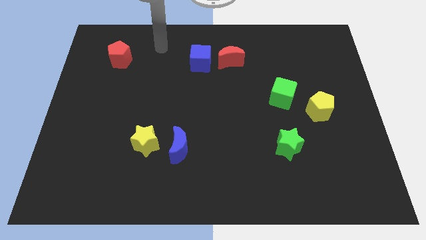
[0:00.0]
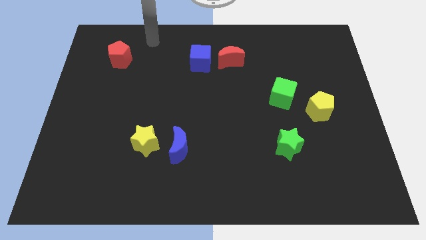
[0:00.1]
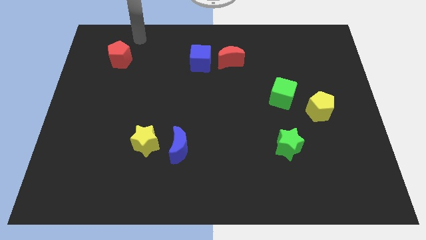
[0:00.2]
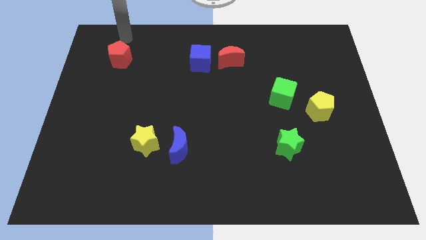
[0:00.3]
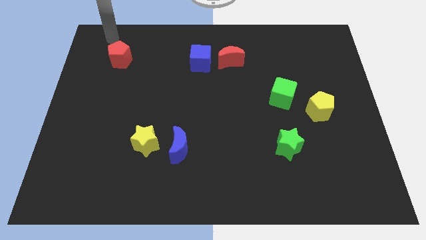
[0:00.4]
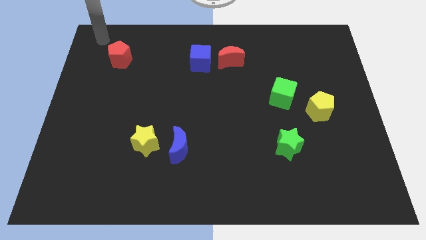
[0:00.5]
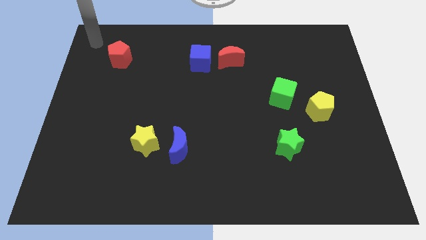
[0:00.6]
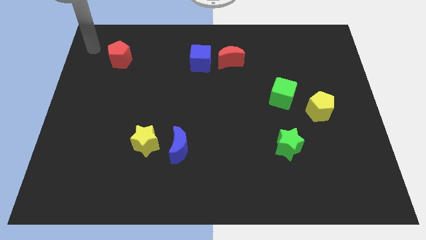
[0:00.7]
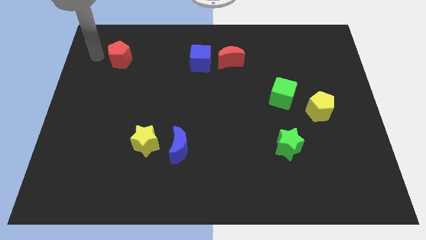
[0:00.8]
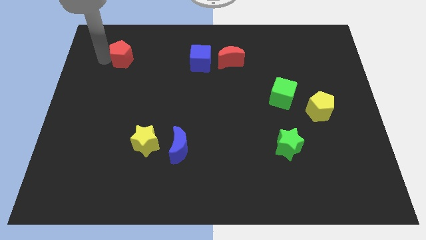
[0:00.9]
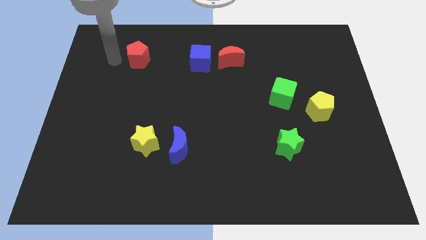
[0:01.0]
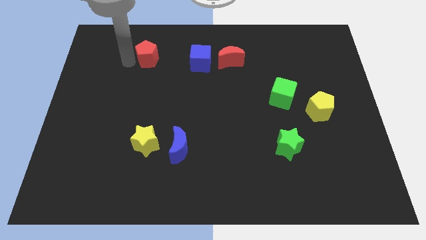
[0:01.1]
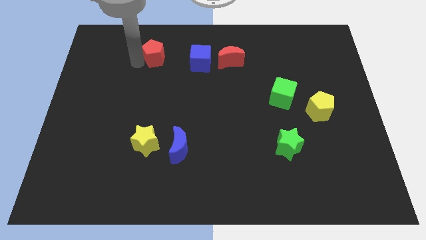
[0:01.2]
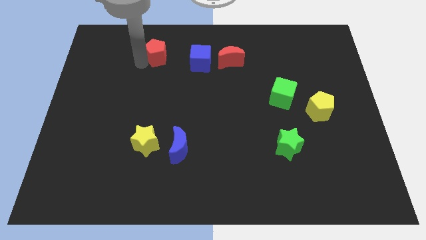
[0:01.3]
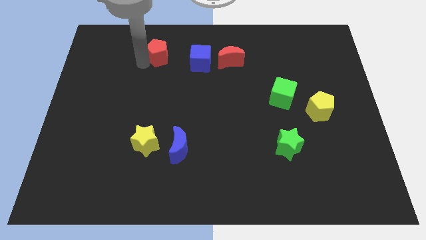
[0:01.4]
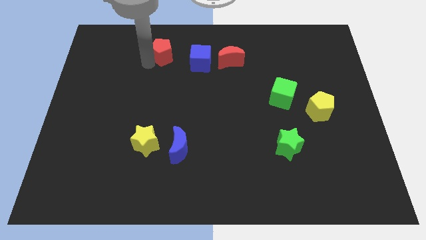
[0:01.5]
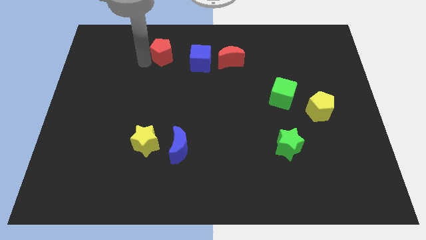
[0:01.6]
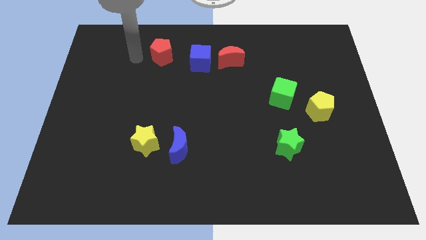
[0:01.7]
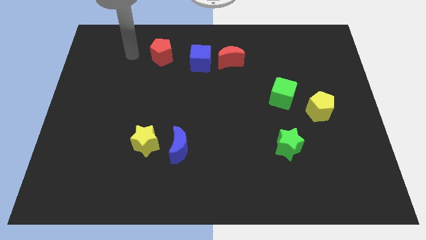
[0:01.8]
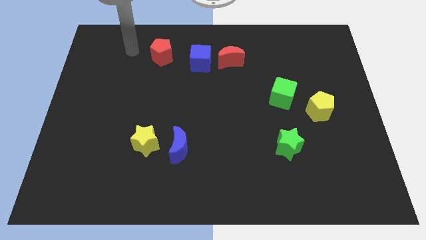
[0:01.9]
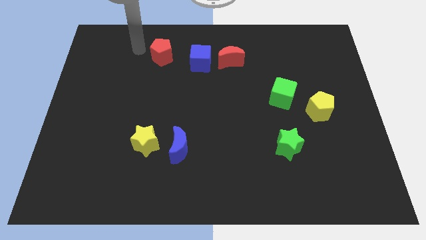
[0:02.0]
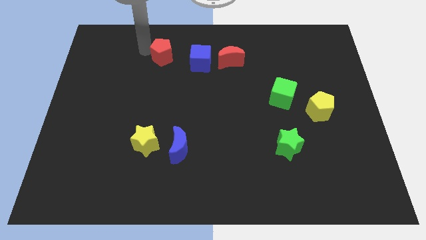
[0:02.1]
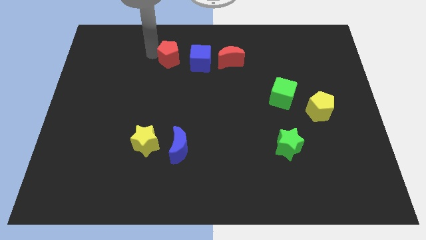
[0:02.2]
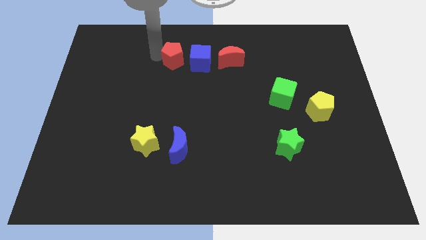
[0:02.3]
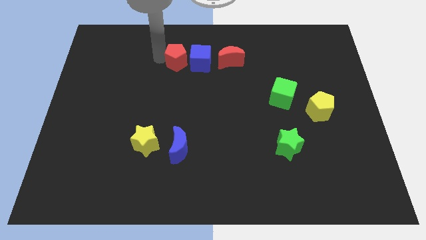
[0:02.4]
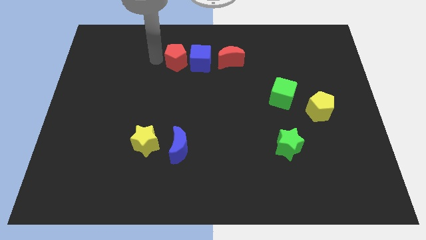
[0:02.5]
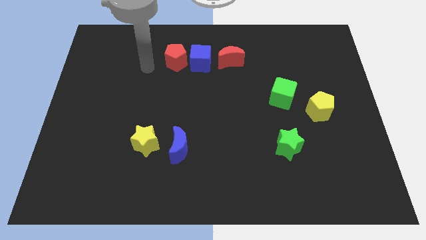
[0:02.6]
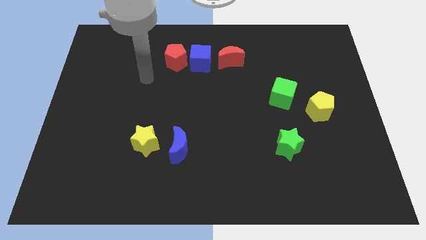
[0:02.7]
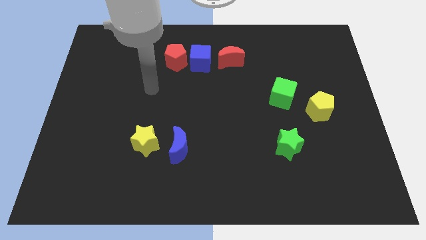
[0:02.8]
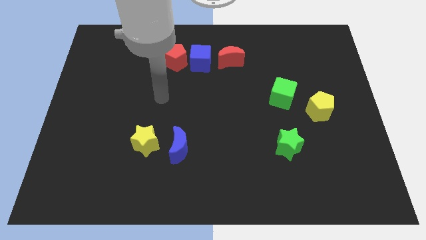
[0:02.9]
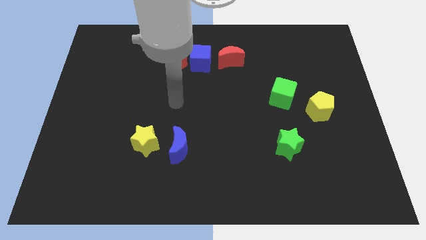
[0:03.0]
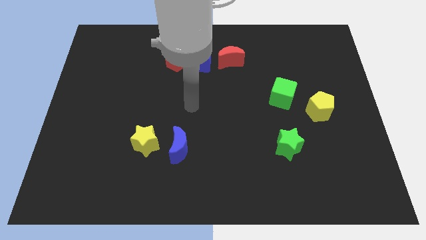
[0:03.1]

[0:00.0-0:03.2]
push the red pentagon to the left side of the blue cube

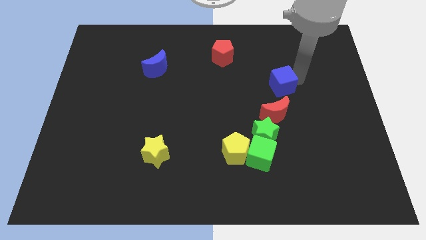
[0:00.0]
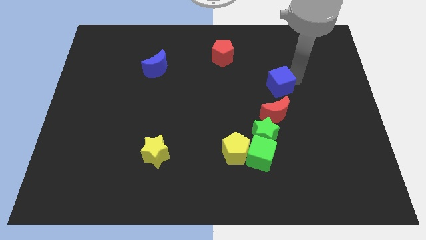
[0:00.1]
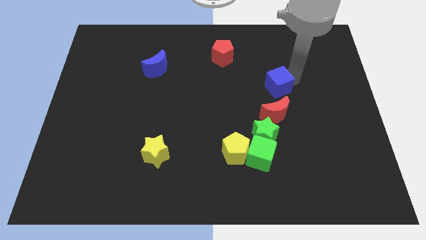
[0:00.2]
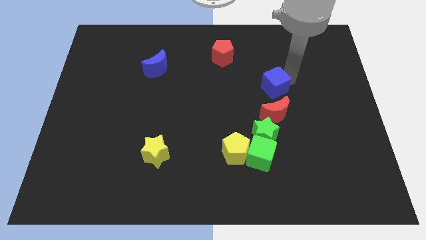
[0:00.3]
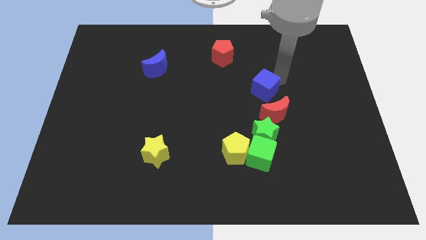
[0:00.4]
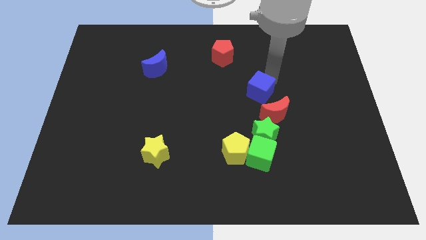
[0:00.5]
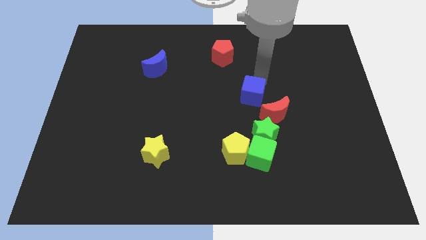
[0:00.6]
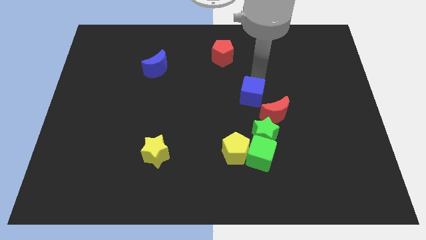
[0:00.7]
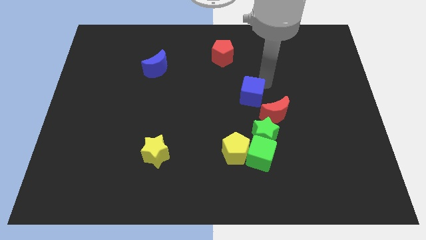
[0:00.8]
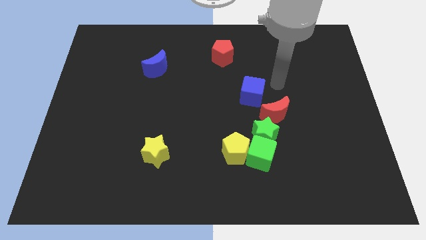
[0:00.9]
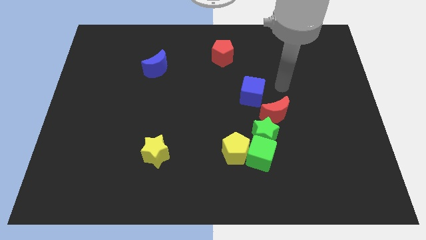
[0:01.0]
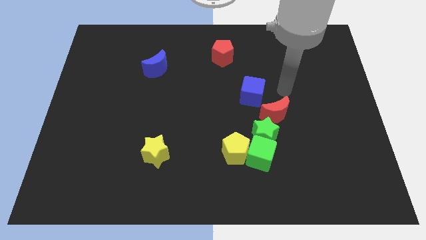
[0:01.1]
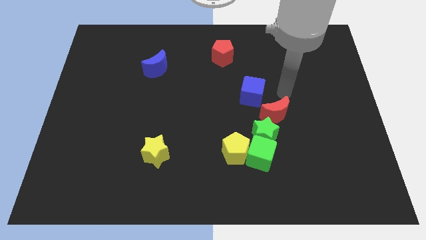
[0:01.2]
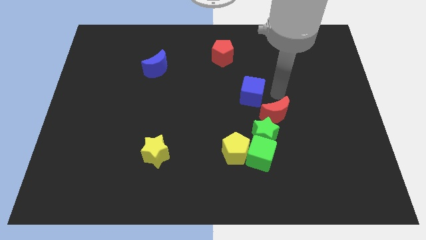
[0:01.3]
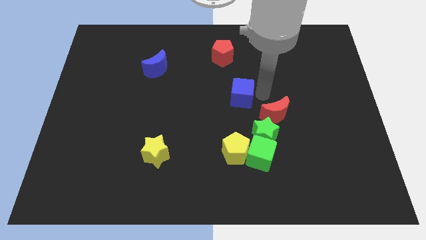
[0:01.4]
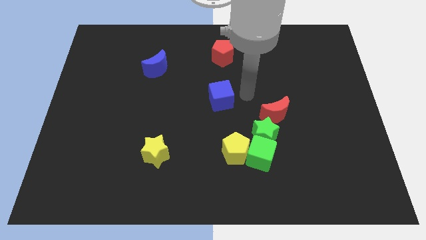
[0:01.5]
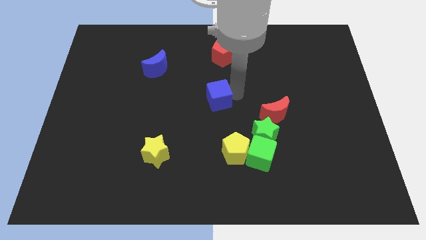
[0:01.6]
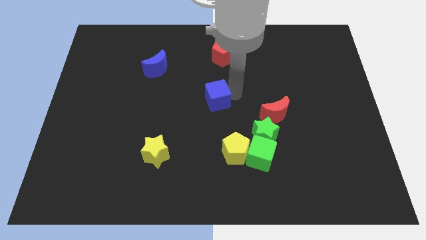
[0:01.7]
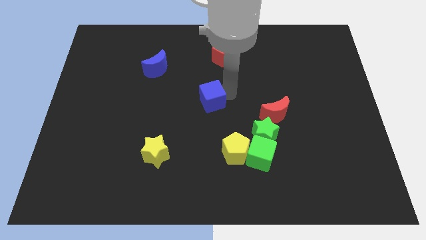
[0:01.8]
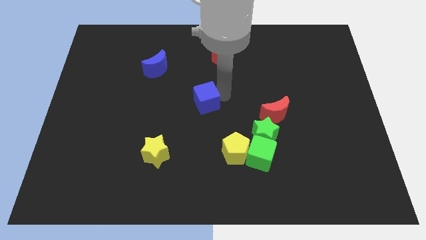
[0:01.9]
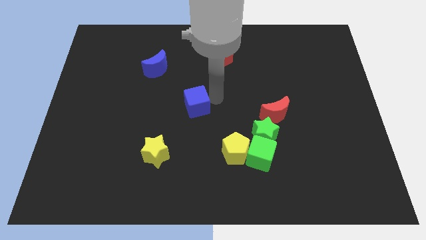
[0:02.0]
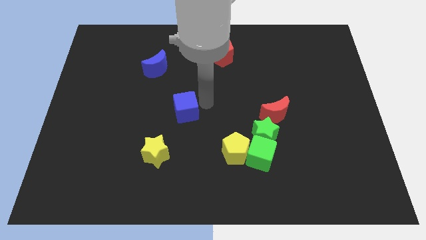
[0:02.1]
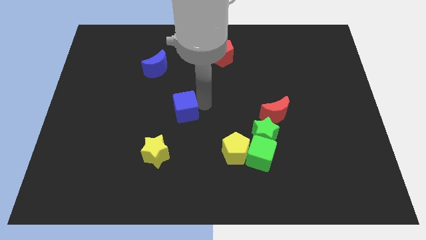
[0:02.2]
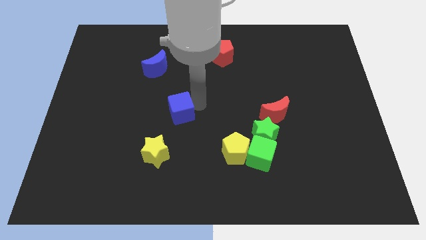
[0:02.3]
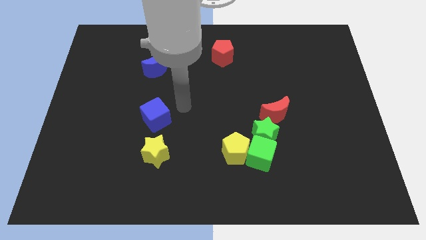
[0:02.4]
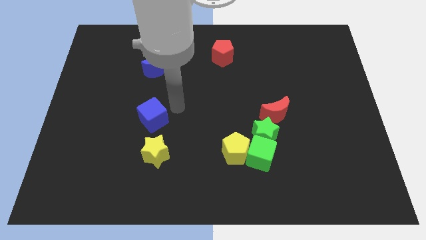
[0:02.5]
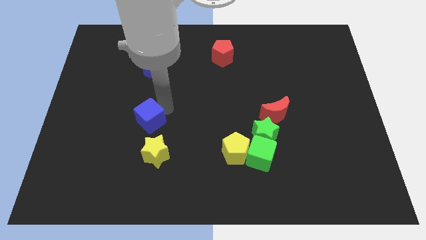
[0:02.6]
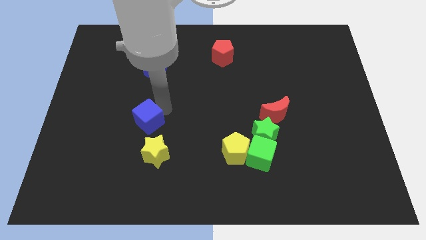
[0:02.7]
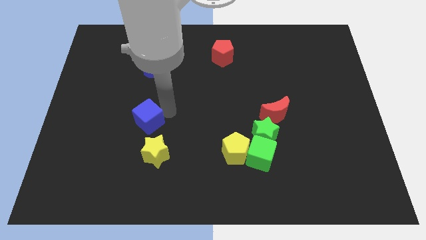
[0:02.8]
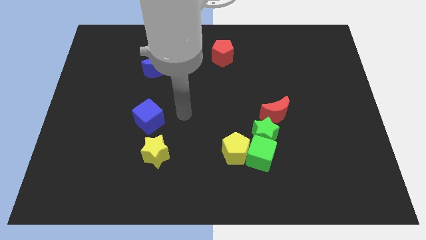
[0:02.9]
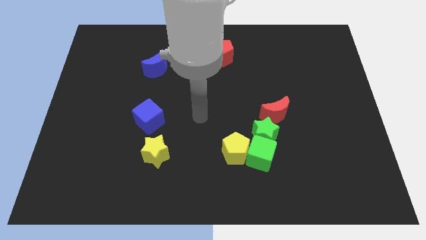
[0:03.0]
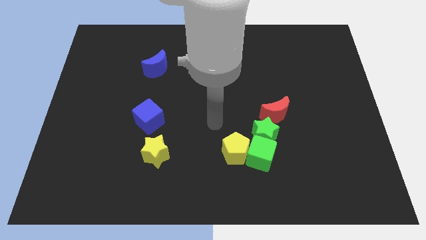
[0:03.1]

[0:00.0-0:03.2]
slide the blue cube vertically below the blue moon

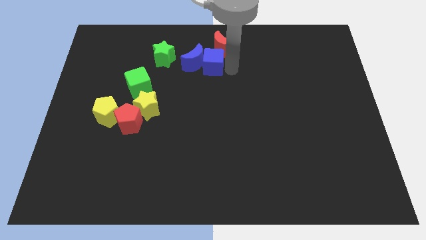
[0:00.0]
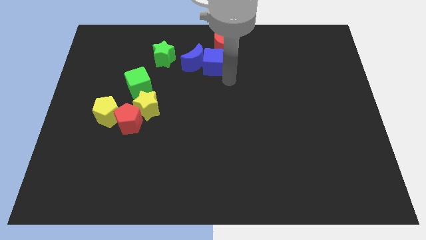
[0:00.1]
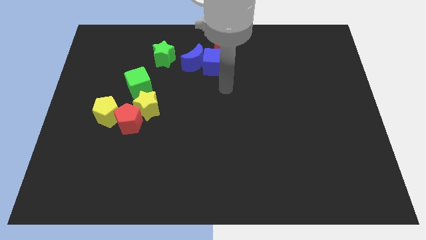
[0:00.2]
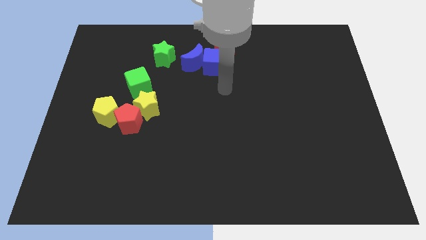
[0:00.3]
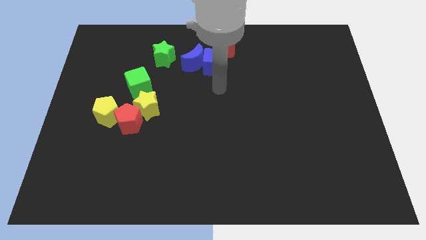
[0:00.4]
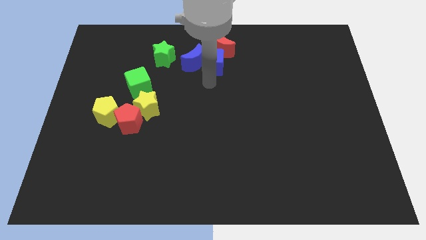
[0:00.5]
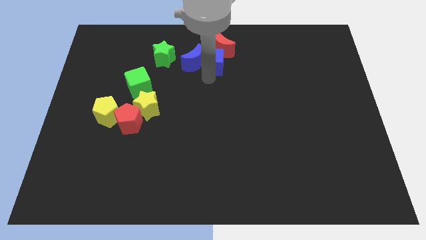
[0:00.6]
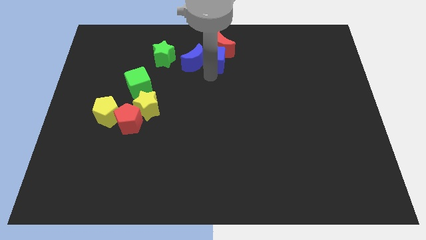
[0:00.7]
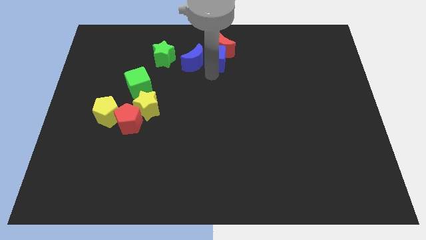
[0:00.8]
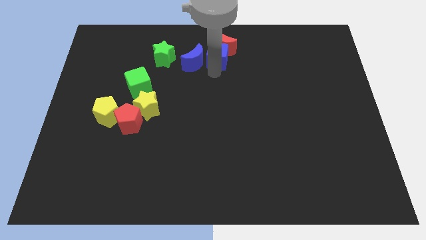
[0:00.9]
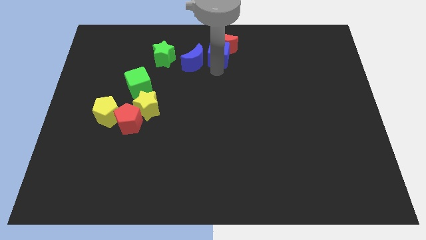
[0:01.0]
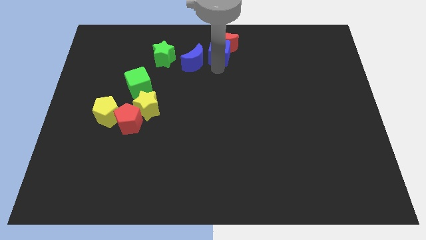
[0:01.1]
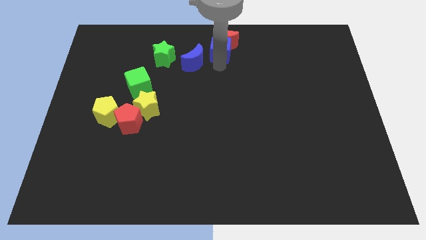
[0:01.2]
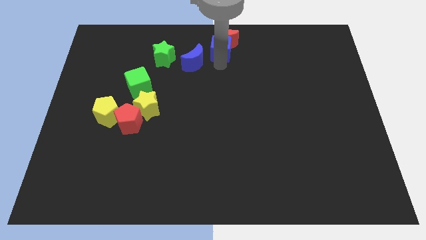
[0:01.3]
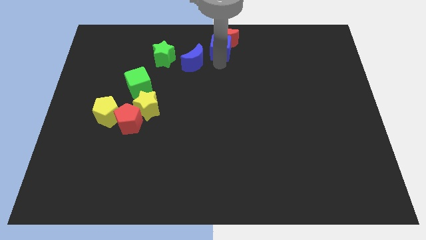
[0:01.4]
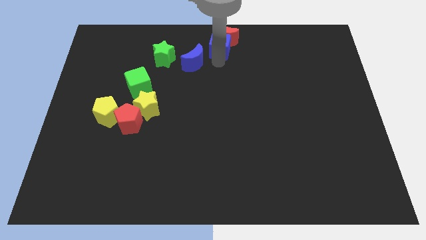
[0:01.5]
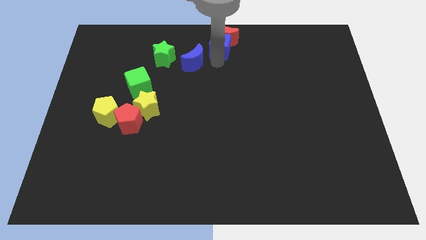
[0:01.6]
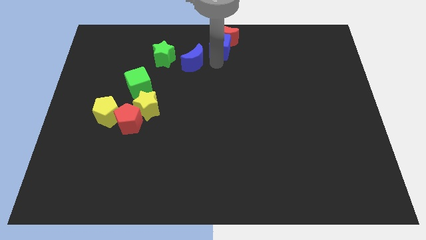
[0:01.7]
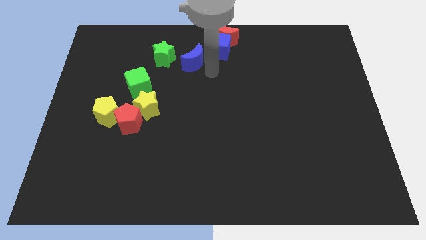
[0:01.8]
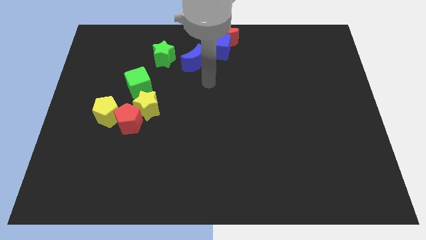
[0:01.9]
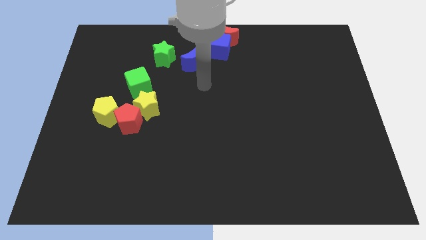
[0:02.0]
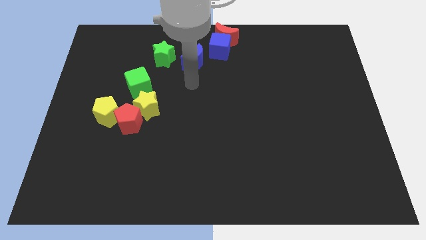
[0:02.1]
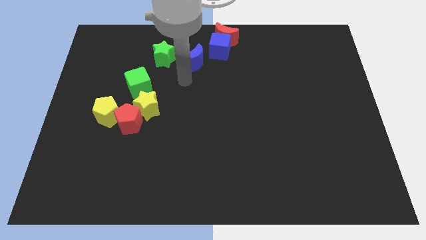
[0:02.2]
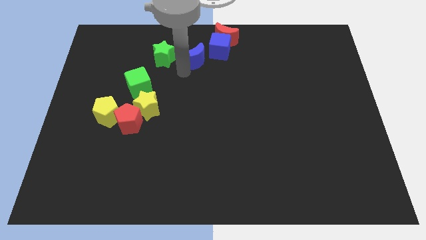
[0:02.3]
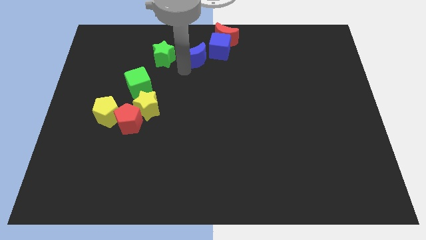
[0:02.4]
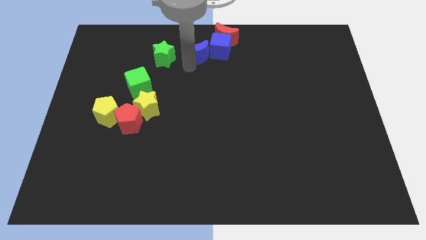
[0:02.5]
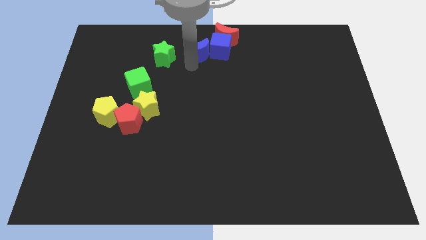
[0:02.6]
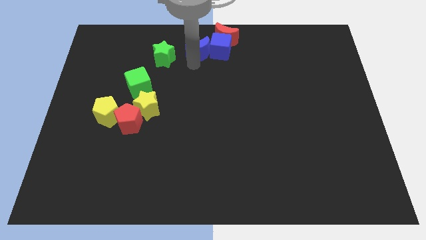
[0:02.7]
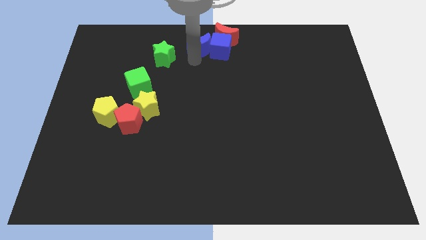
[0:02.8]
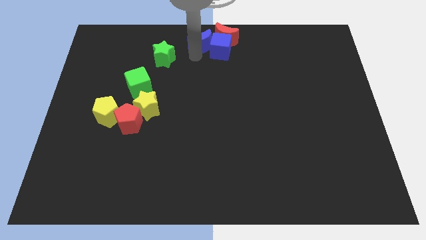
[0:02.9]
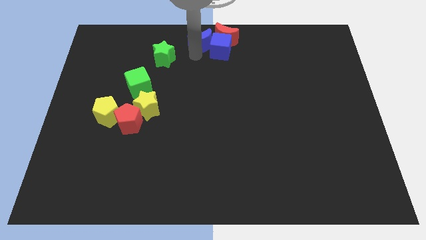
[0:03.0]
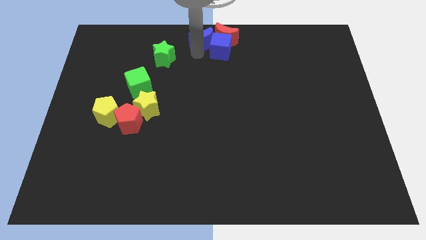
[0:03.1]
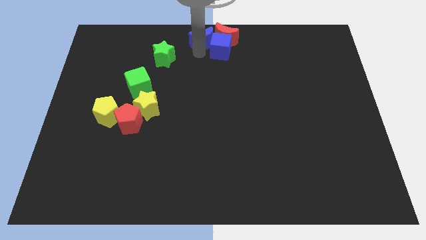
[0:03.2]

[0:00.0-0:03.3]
group up the blue blocks and red crescent at the top center of the board
